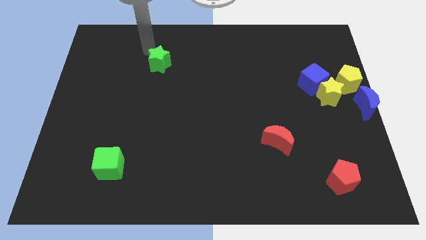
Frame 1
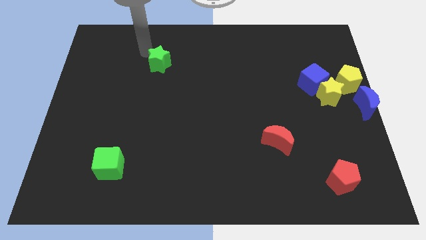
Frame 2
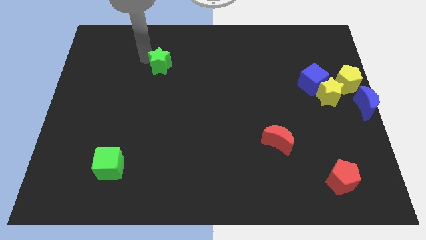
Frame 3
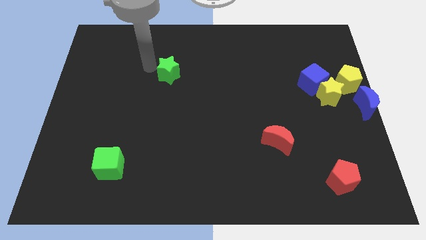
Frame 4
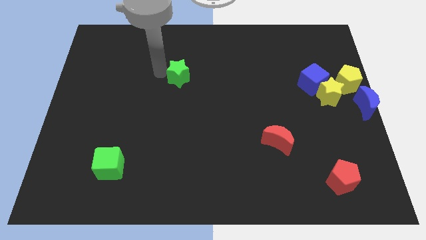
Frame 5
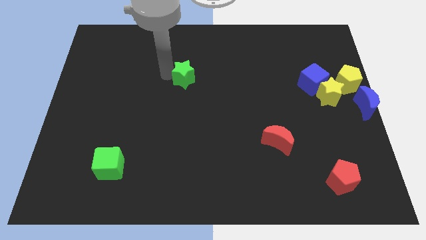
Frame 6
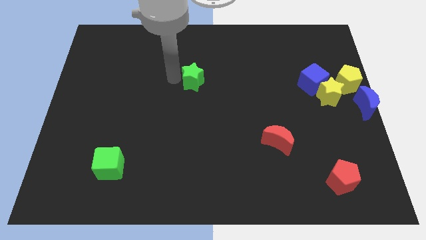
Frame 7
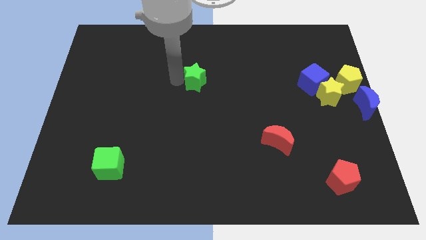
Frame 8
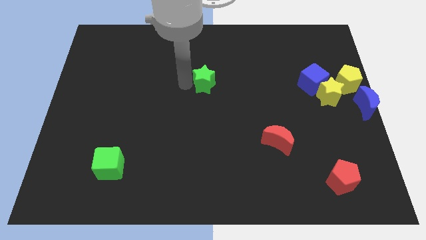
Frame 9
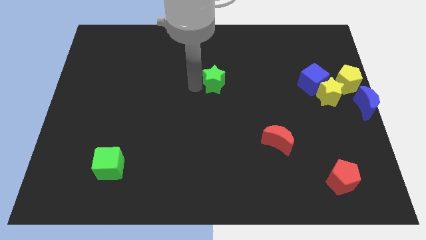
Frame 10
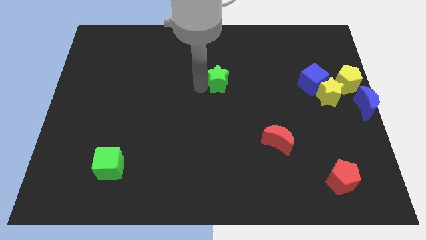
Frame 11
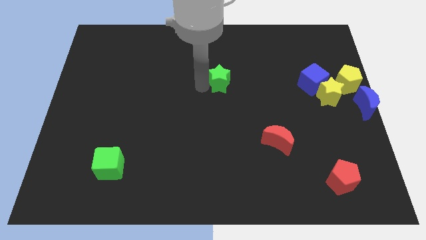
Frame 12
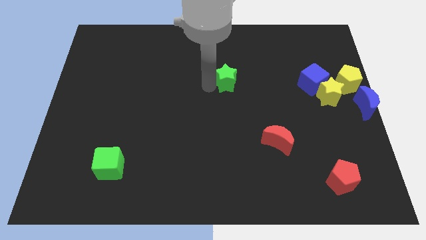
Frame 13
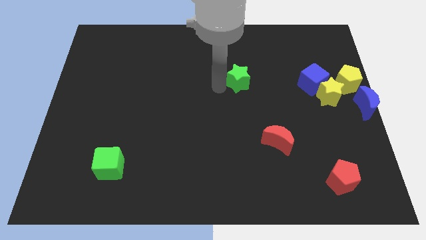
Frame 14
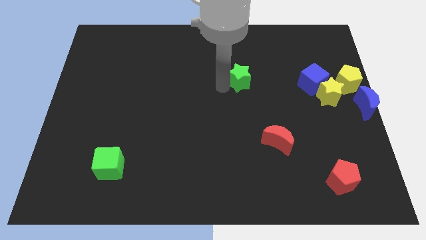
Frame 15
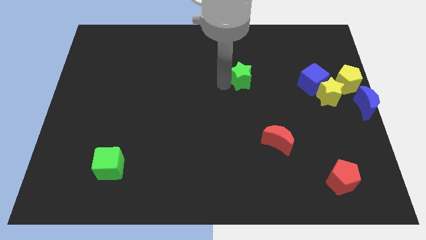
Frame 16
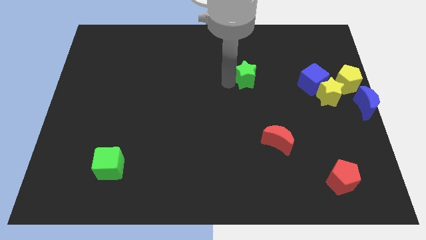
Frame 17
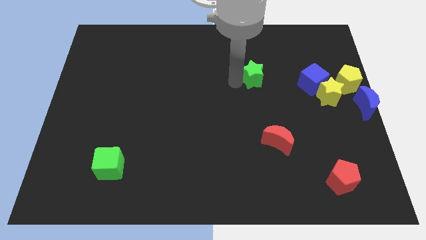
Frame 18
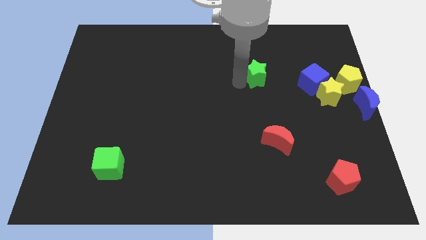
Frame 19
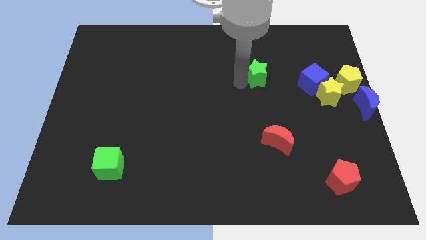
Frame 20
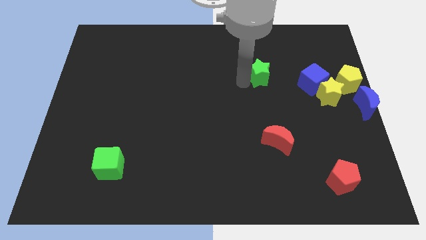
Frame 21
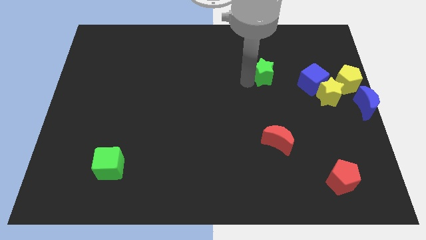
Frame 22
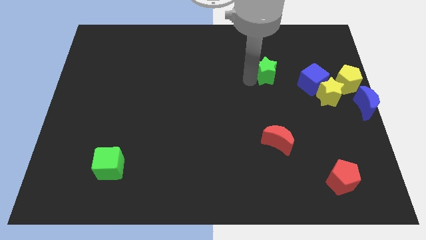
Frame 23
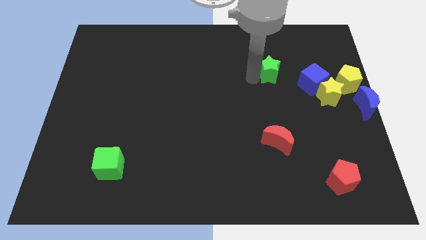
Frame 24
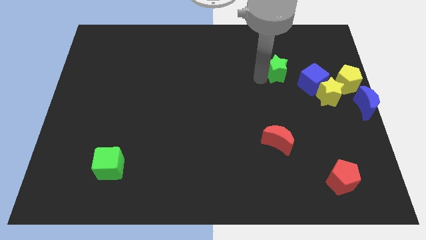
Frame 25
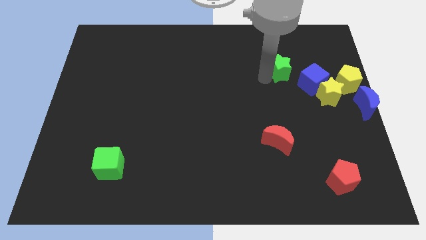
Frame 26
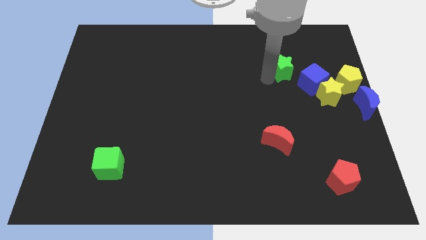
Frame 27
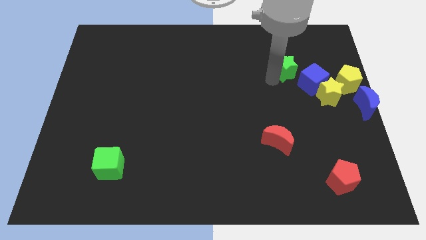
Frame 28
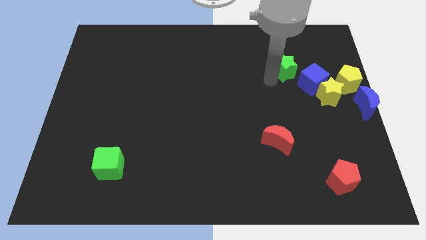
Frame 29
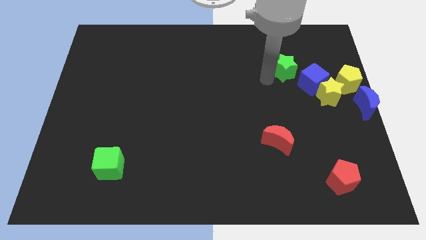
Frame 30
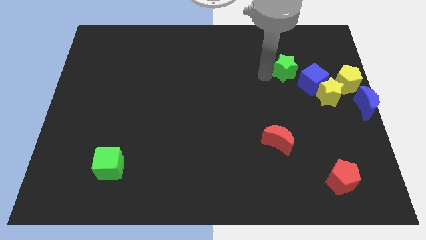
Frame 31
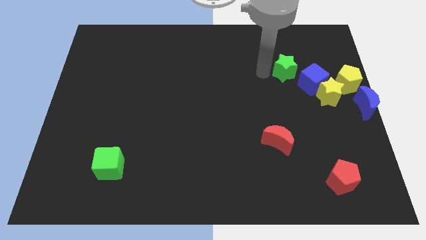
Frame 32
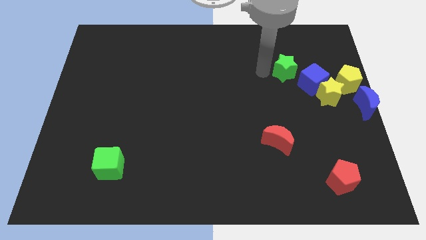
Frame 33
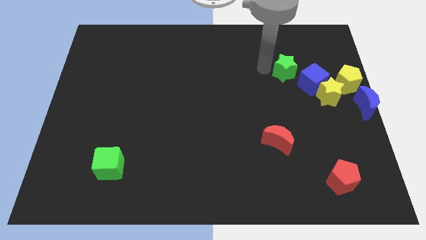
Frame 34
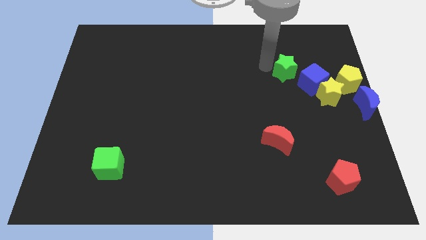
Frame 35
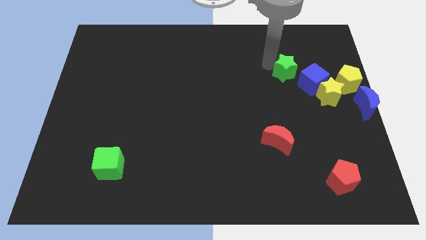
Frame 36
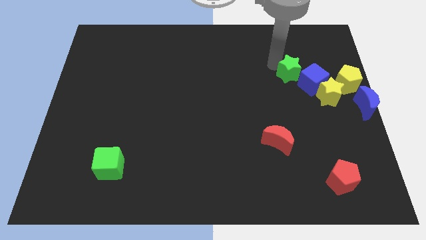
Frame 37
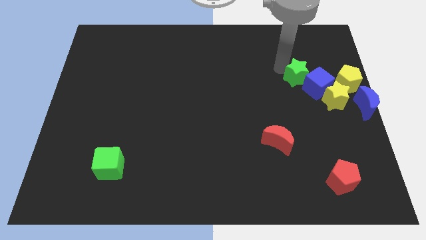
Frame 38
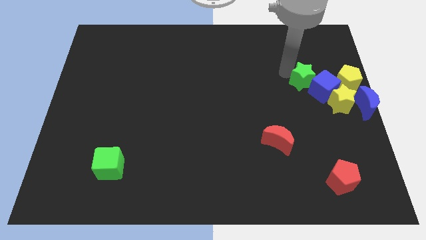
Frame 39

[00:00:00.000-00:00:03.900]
push the green star into the top left of the blue cube

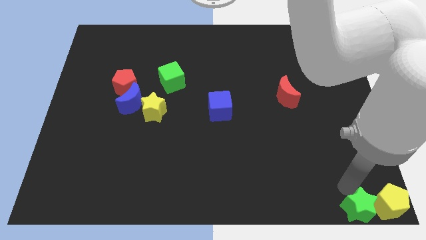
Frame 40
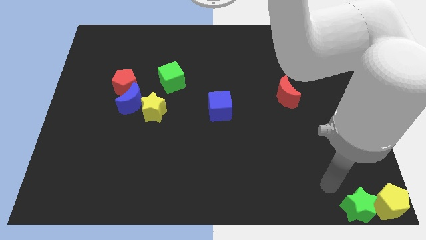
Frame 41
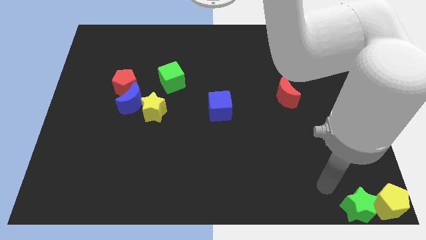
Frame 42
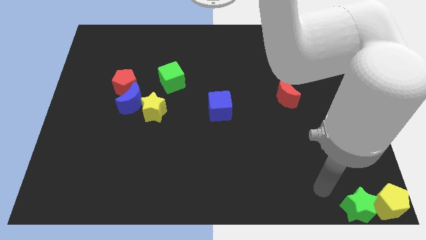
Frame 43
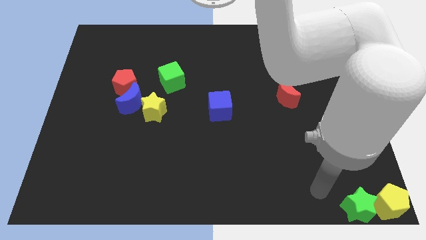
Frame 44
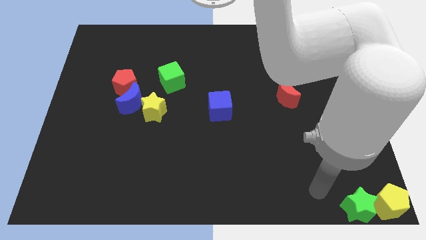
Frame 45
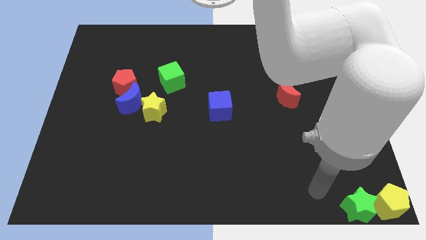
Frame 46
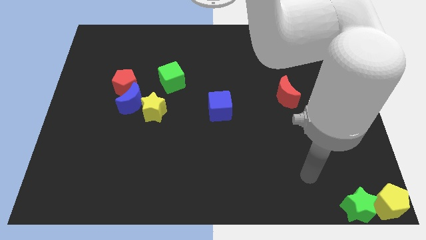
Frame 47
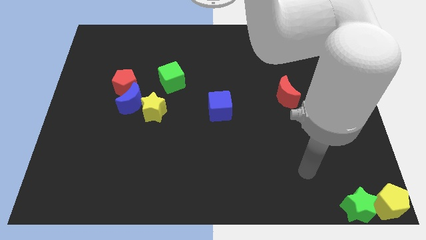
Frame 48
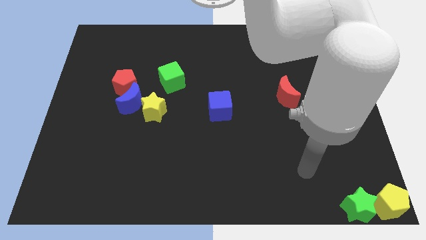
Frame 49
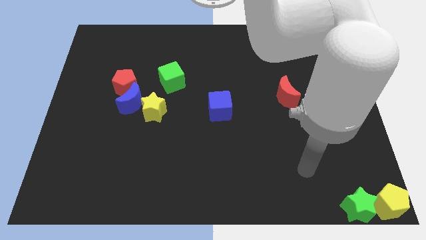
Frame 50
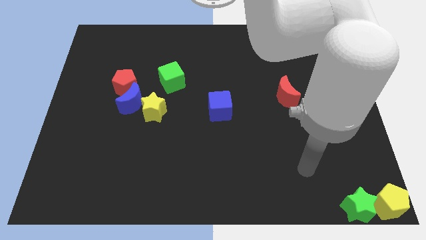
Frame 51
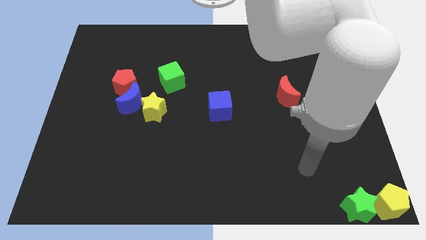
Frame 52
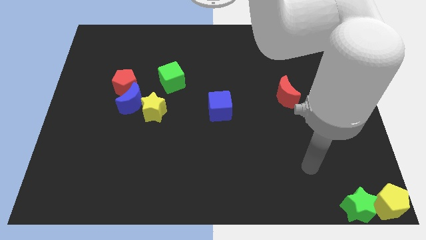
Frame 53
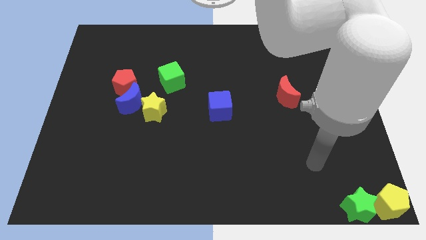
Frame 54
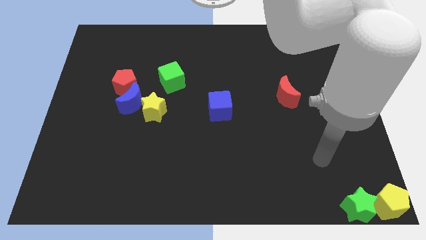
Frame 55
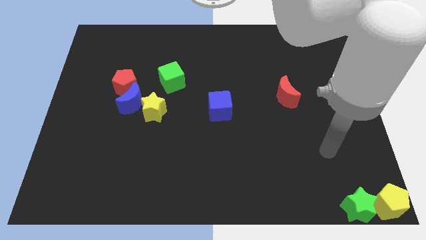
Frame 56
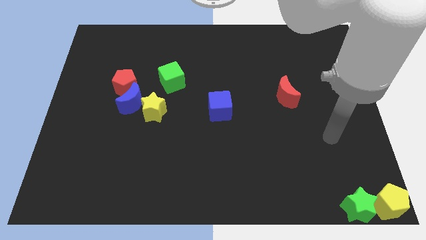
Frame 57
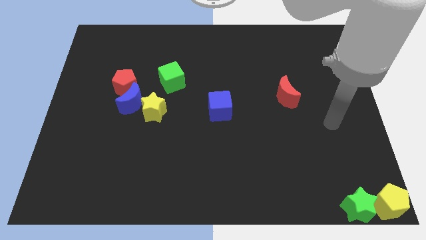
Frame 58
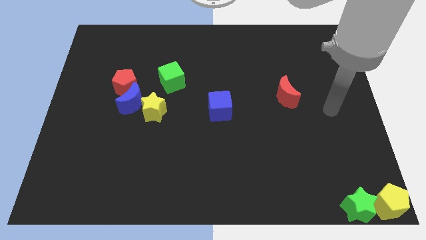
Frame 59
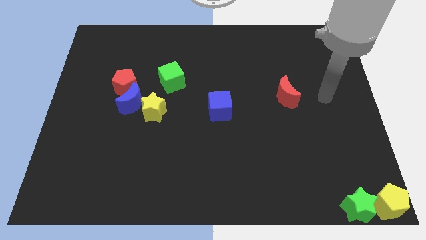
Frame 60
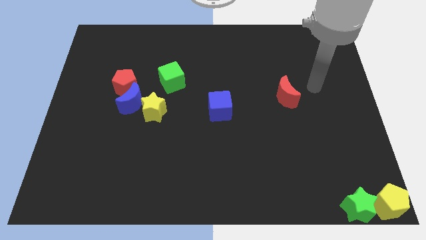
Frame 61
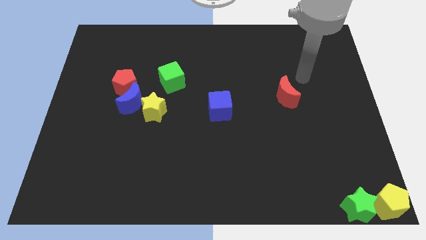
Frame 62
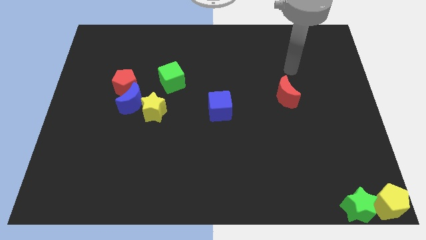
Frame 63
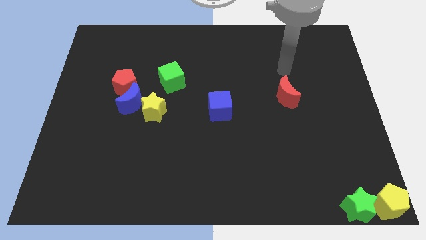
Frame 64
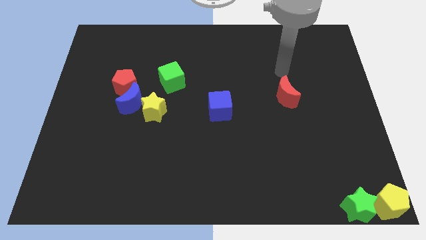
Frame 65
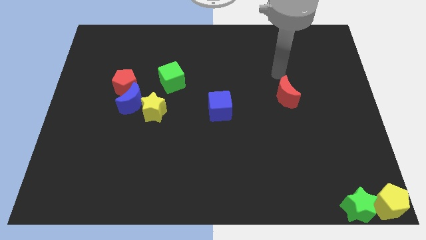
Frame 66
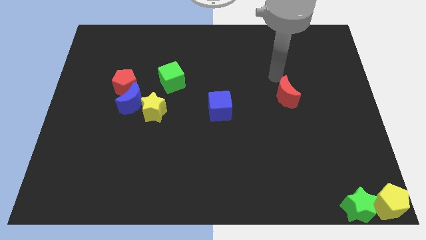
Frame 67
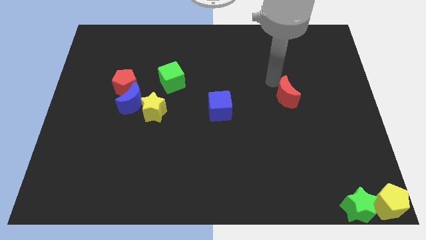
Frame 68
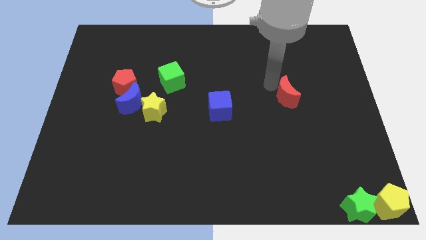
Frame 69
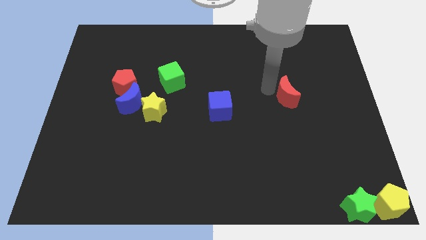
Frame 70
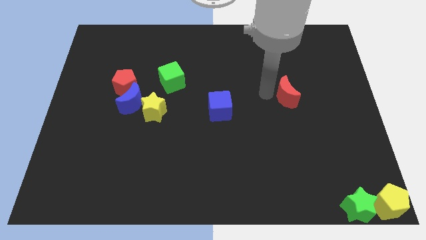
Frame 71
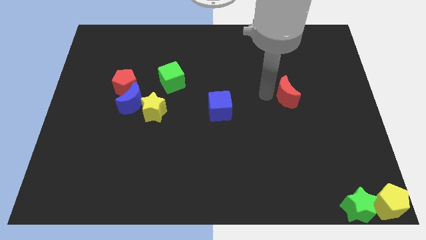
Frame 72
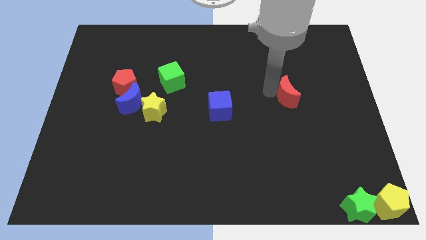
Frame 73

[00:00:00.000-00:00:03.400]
point your arm at the left of the red crescent

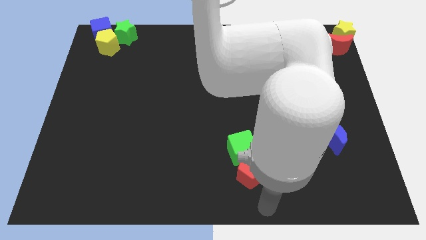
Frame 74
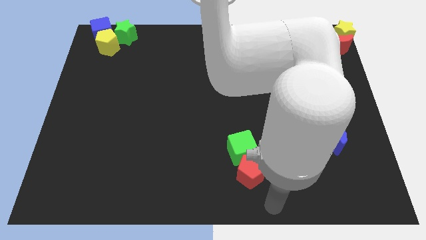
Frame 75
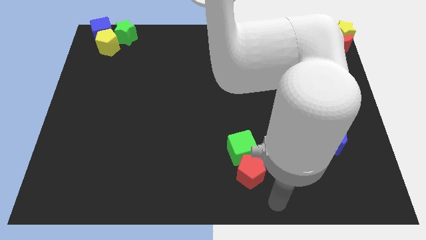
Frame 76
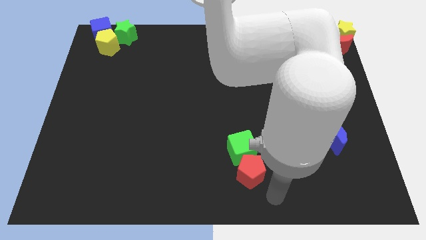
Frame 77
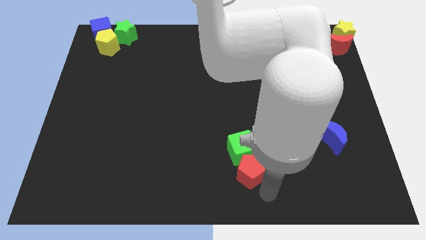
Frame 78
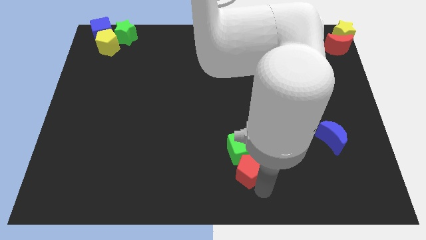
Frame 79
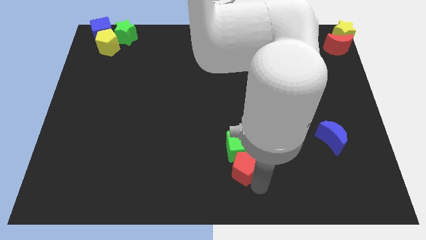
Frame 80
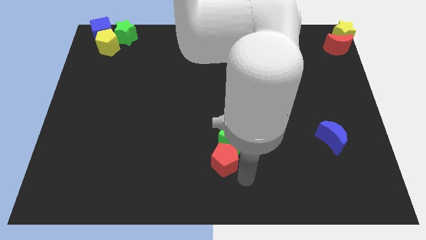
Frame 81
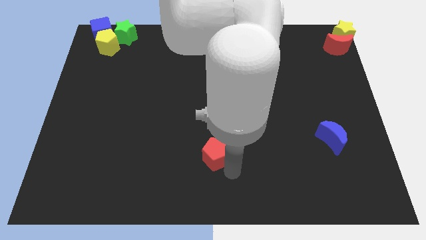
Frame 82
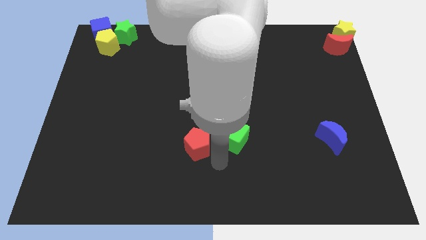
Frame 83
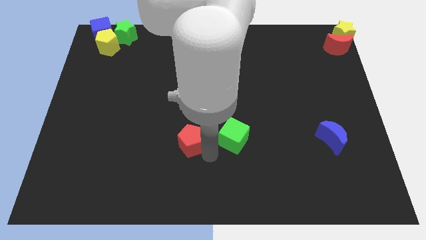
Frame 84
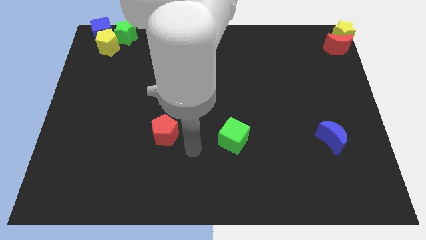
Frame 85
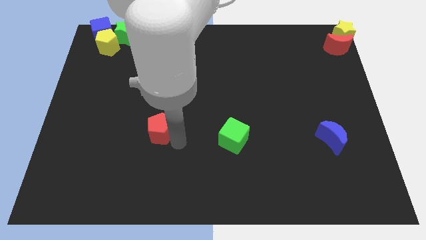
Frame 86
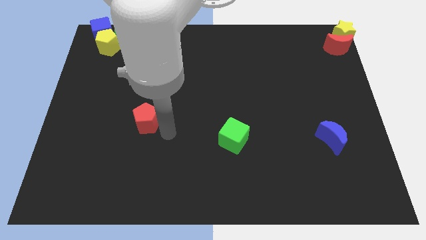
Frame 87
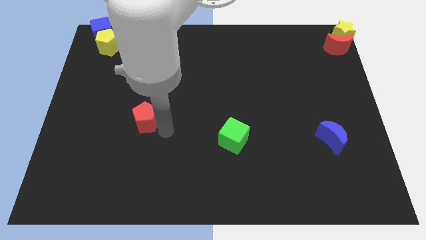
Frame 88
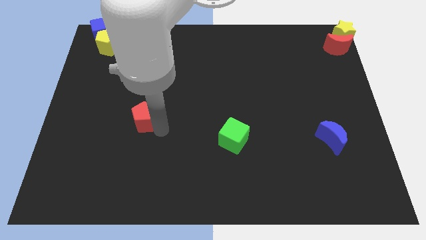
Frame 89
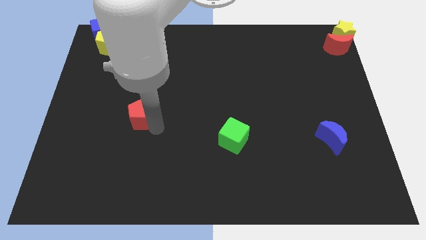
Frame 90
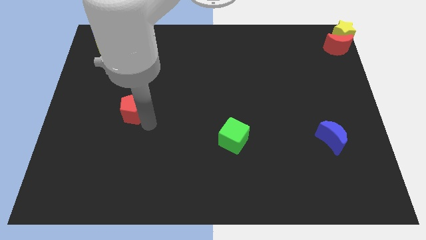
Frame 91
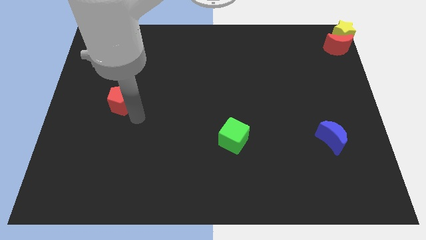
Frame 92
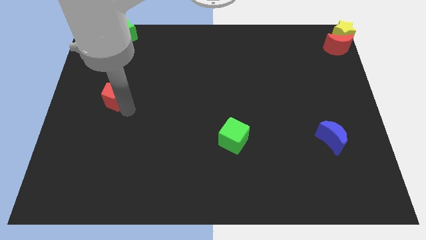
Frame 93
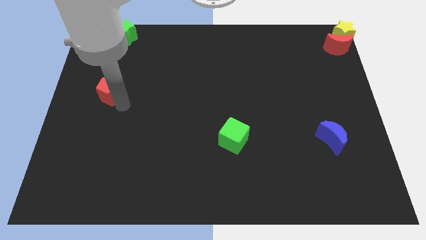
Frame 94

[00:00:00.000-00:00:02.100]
separate red pentagon from green cube
